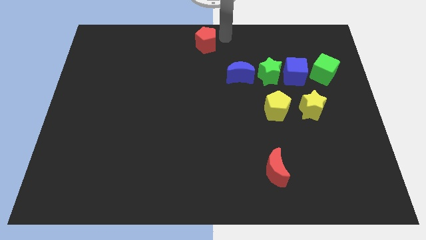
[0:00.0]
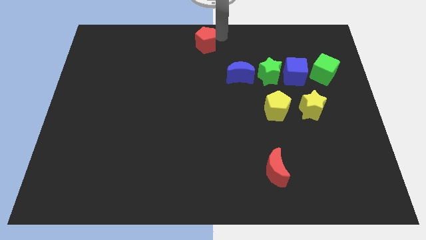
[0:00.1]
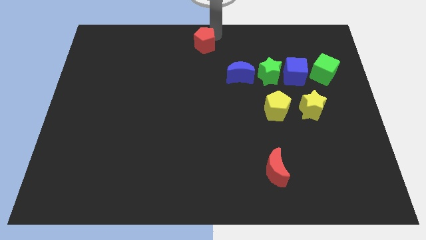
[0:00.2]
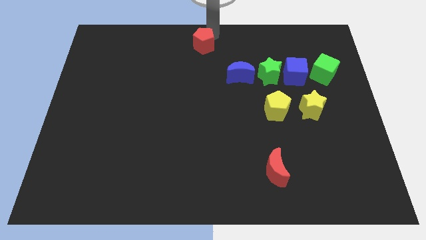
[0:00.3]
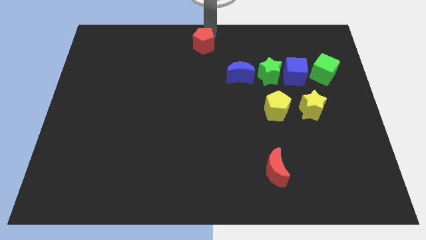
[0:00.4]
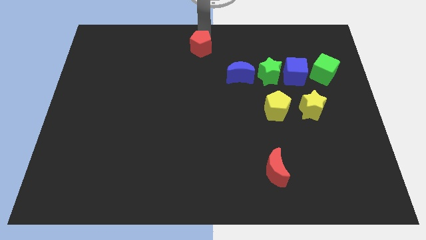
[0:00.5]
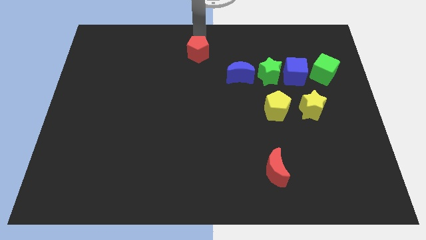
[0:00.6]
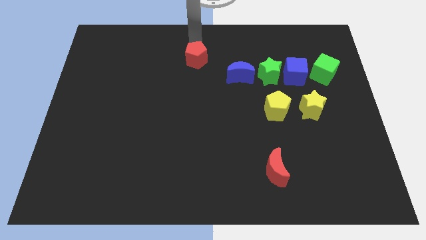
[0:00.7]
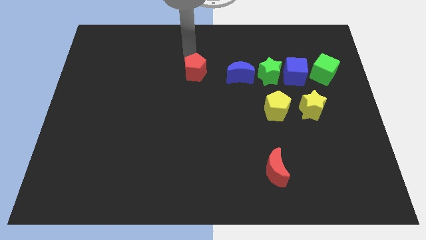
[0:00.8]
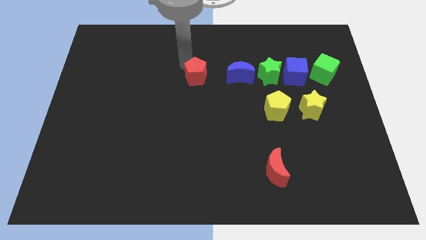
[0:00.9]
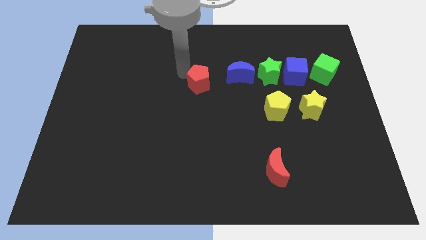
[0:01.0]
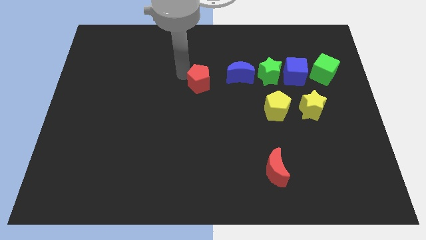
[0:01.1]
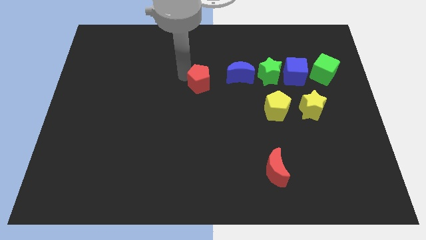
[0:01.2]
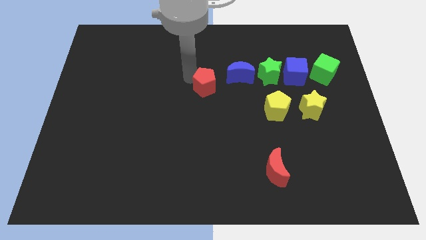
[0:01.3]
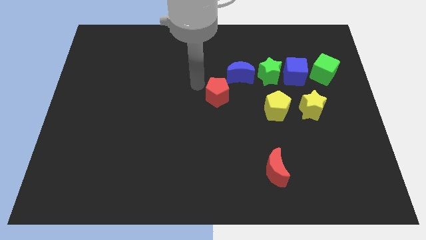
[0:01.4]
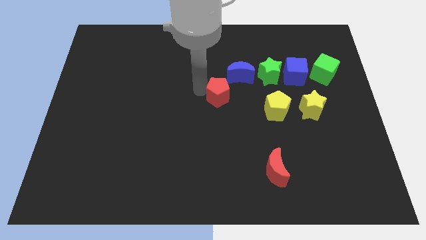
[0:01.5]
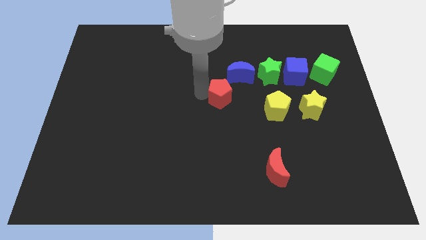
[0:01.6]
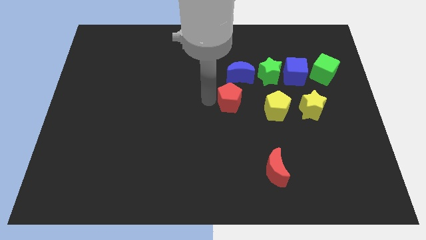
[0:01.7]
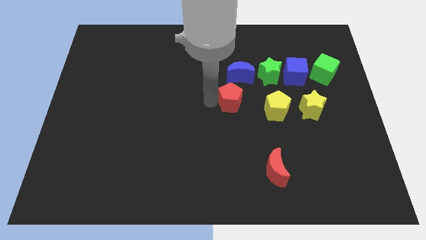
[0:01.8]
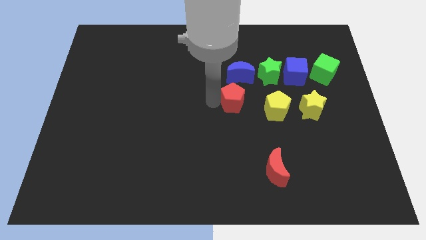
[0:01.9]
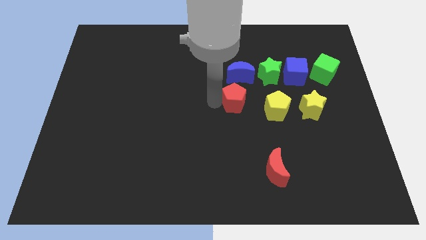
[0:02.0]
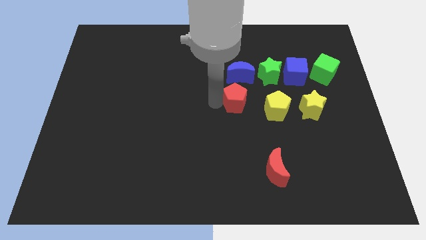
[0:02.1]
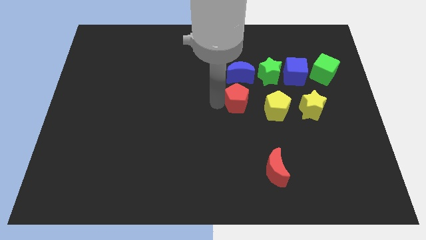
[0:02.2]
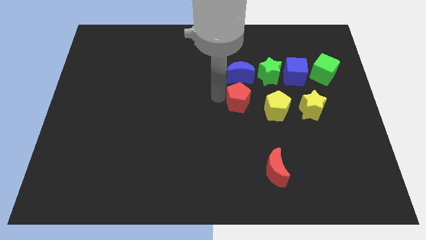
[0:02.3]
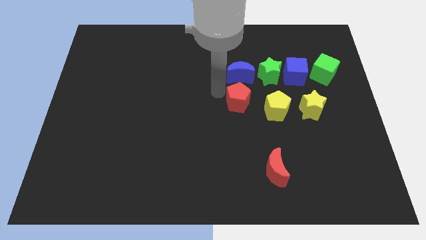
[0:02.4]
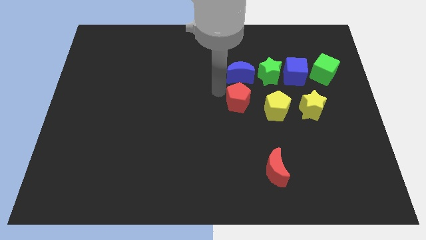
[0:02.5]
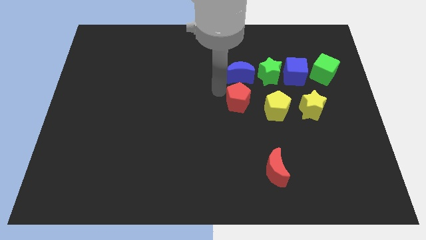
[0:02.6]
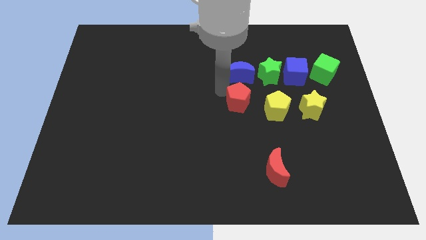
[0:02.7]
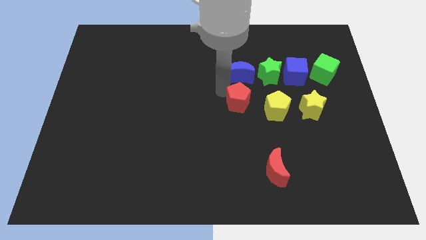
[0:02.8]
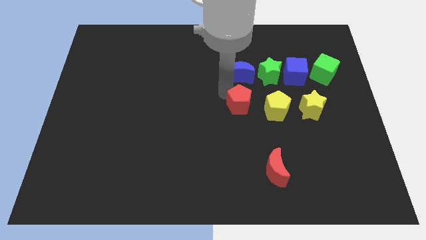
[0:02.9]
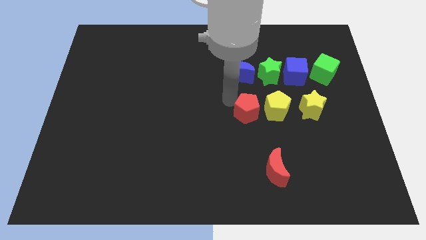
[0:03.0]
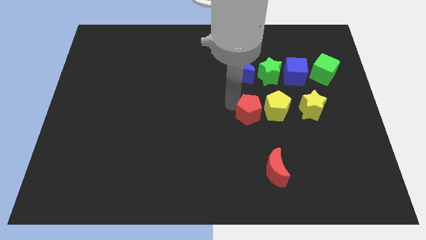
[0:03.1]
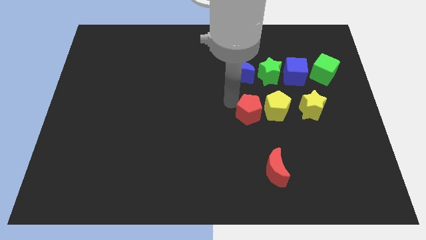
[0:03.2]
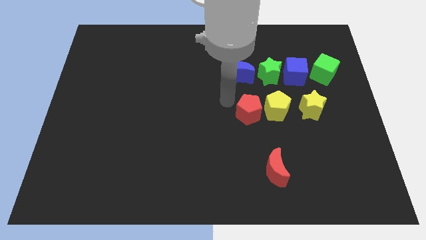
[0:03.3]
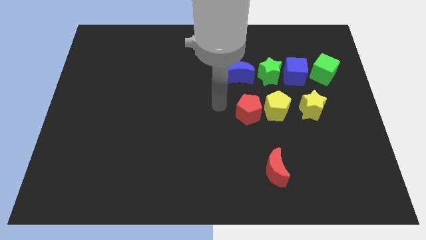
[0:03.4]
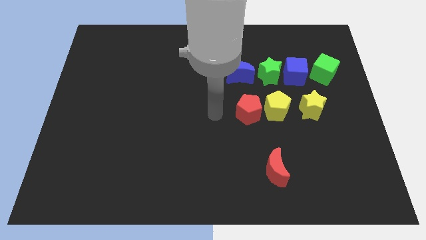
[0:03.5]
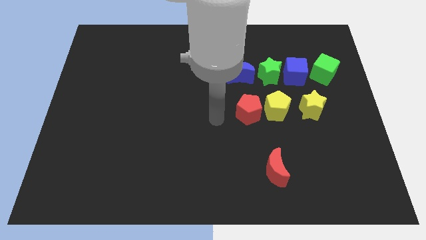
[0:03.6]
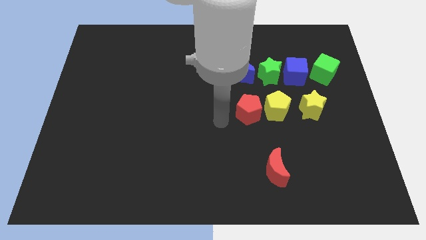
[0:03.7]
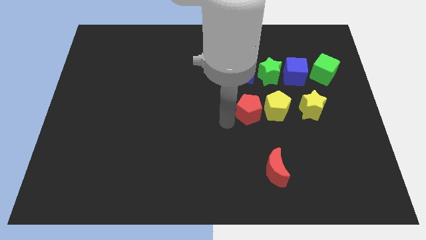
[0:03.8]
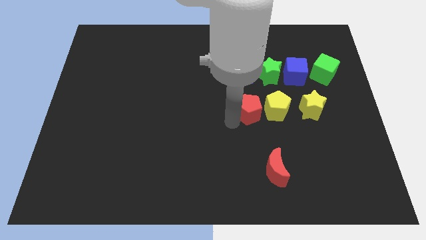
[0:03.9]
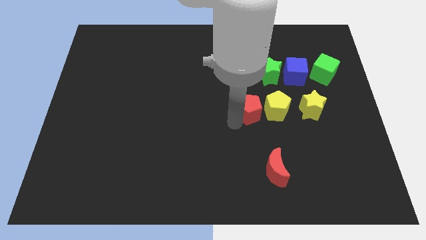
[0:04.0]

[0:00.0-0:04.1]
move red pentagon parallel left to yellow pentagon

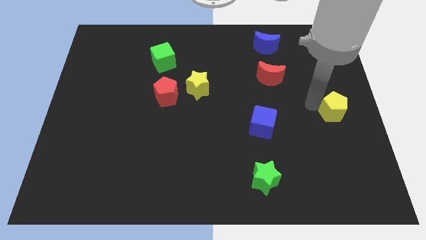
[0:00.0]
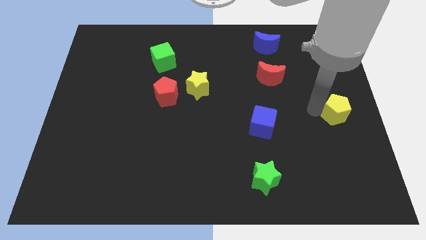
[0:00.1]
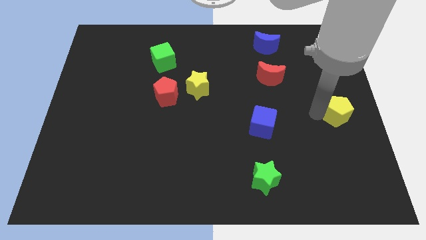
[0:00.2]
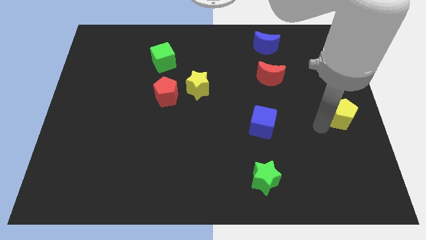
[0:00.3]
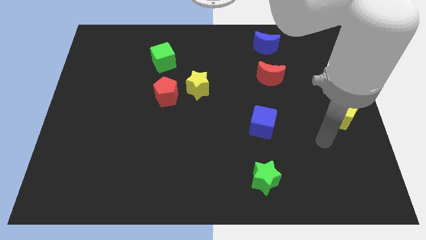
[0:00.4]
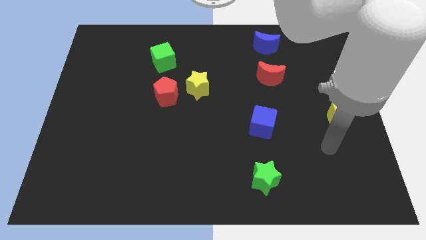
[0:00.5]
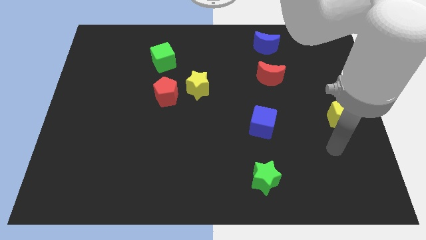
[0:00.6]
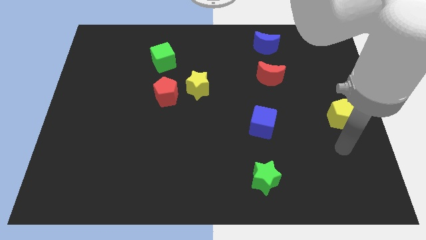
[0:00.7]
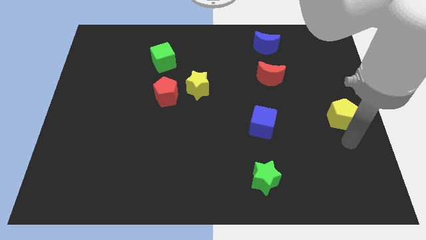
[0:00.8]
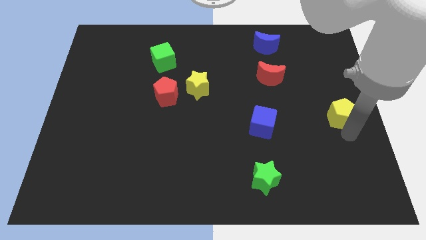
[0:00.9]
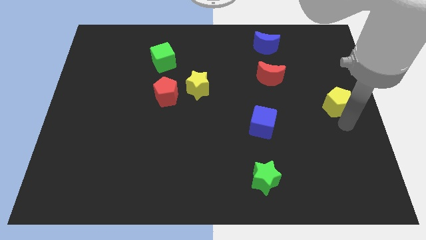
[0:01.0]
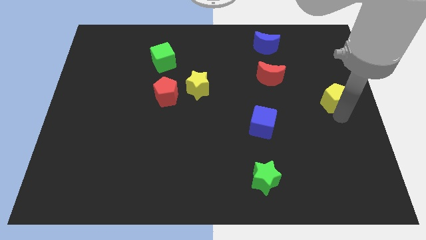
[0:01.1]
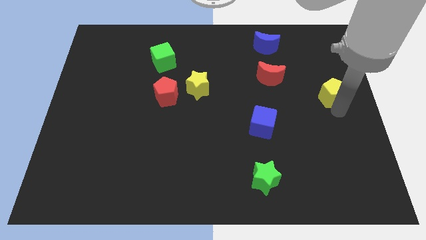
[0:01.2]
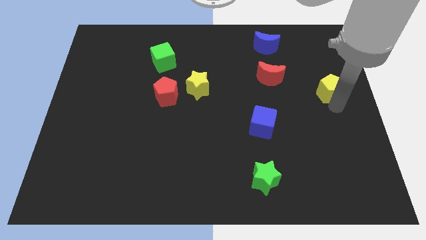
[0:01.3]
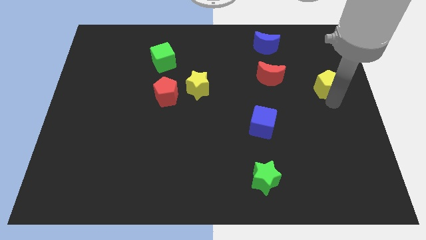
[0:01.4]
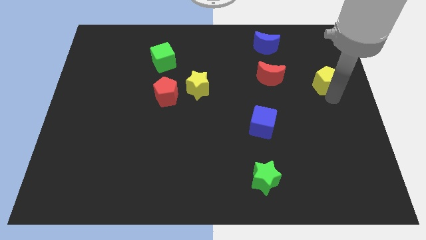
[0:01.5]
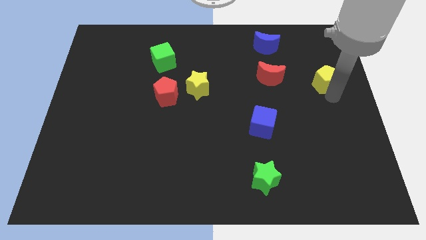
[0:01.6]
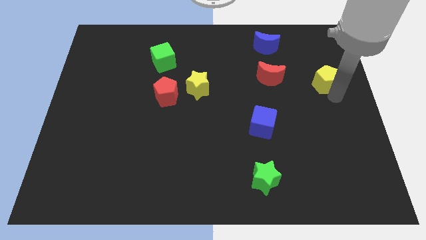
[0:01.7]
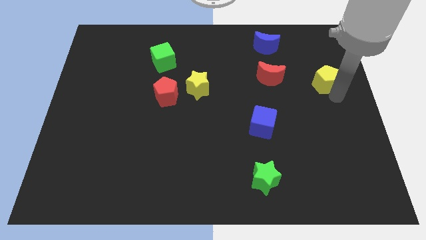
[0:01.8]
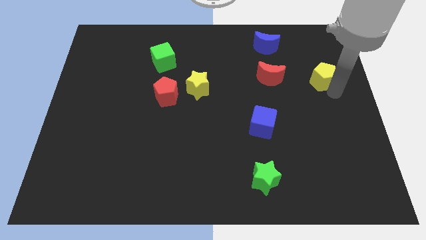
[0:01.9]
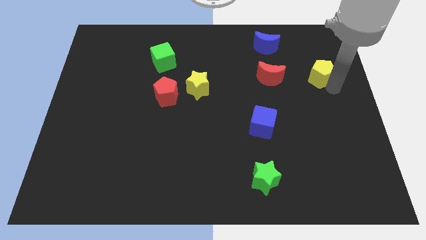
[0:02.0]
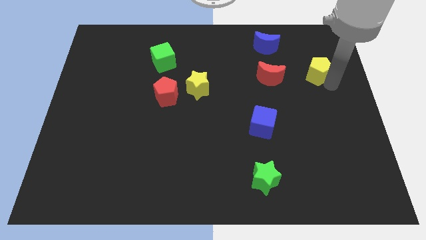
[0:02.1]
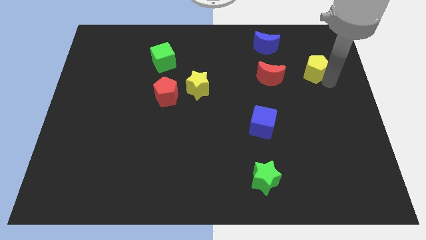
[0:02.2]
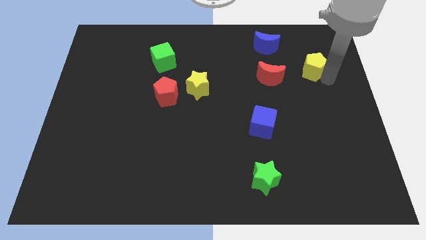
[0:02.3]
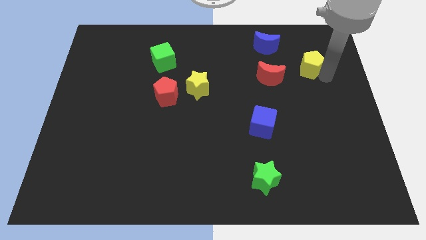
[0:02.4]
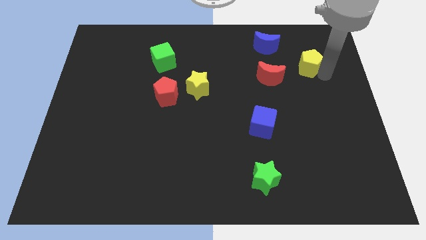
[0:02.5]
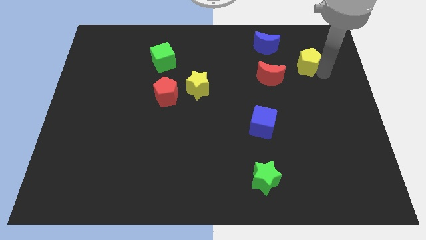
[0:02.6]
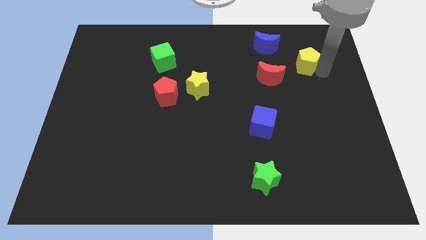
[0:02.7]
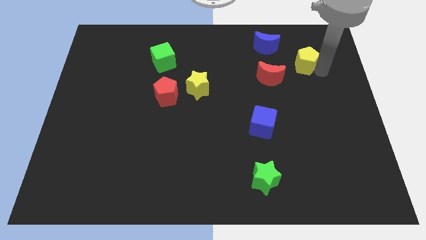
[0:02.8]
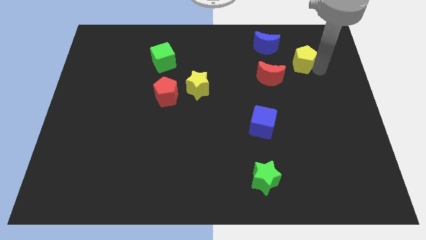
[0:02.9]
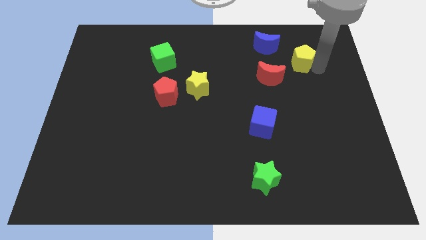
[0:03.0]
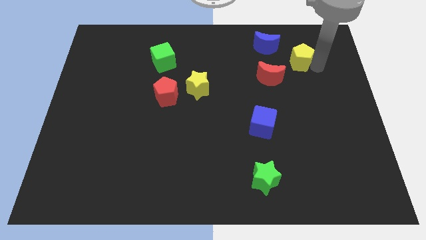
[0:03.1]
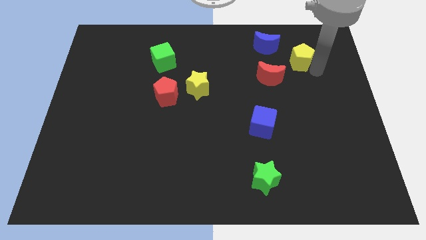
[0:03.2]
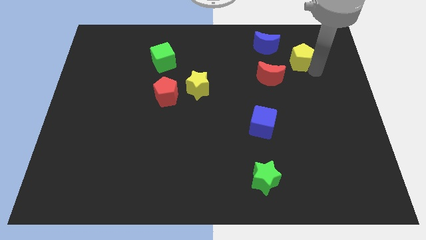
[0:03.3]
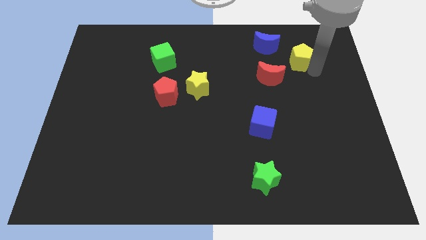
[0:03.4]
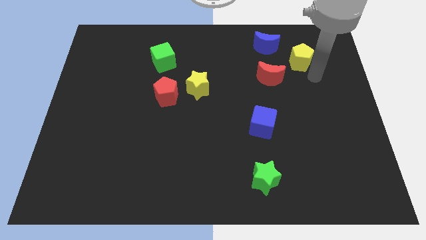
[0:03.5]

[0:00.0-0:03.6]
put the yellow pentagon at the top right of the red crescent

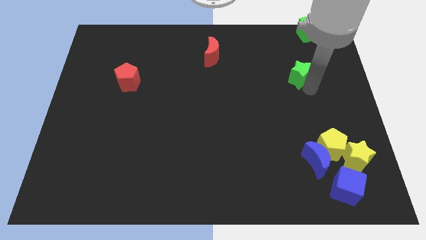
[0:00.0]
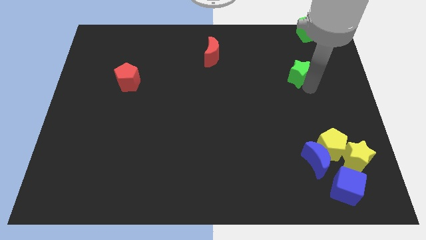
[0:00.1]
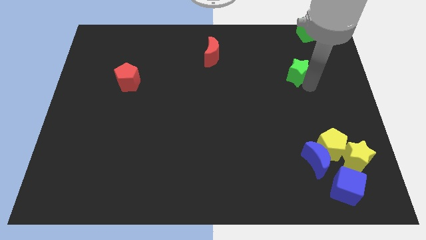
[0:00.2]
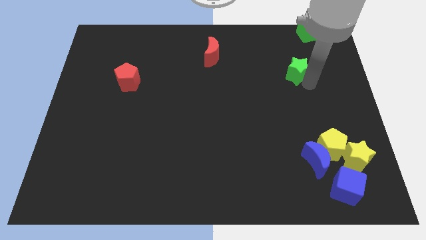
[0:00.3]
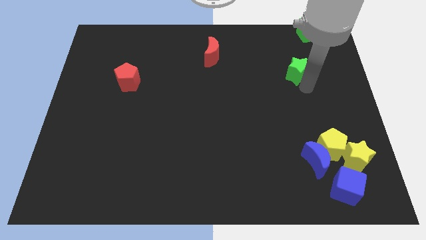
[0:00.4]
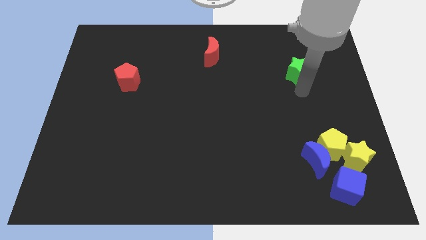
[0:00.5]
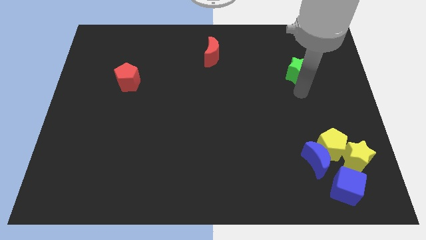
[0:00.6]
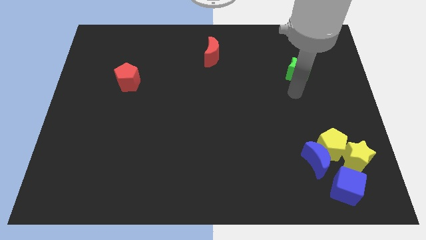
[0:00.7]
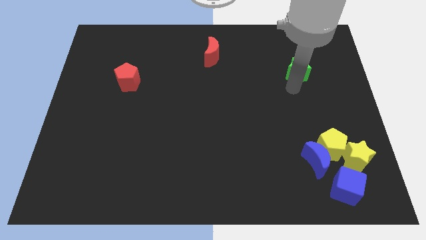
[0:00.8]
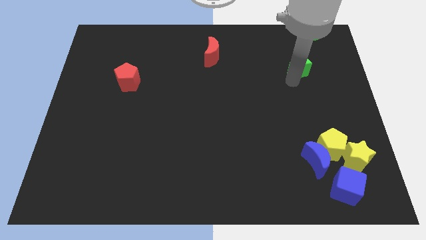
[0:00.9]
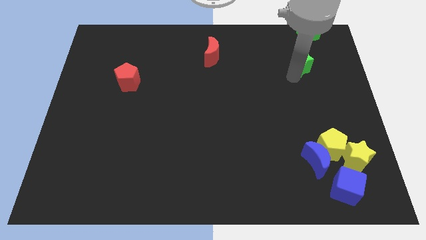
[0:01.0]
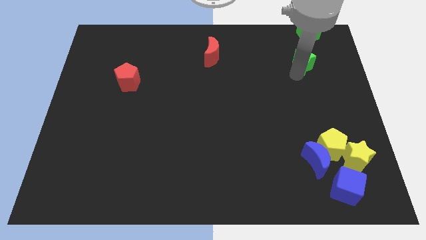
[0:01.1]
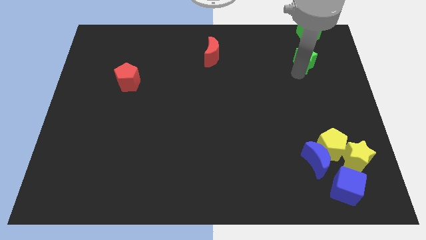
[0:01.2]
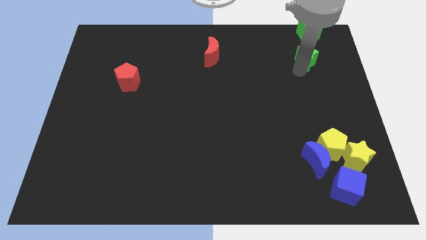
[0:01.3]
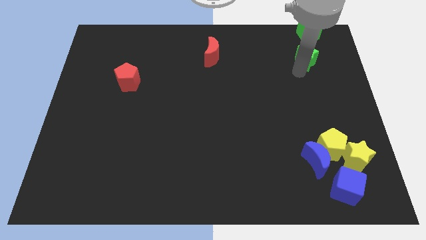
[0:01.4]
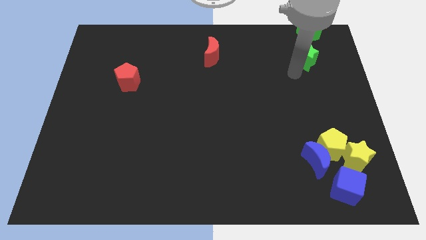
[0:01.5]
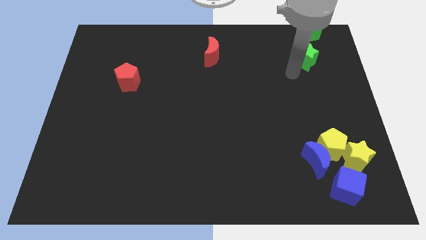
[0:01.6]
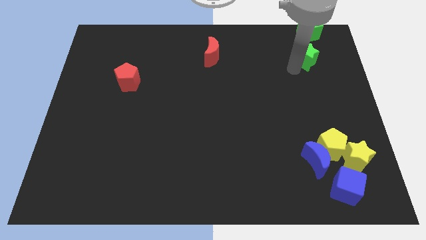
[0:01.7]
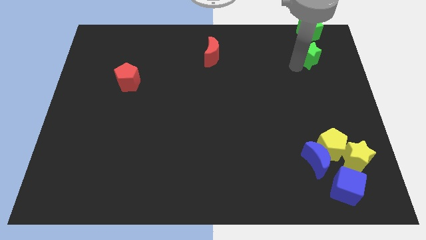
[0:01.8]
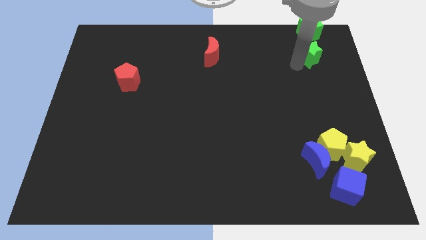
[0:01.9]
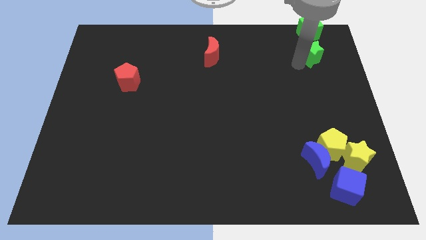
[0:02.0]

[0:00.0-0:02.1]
put the green star underneath the green cube
